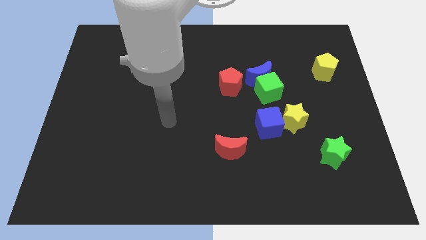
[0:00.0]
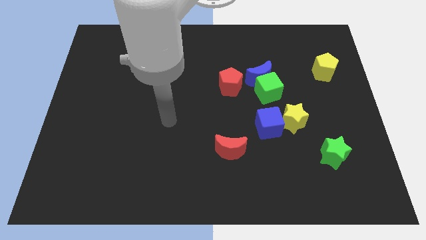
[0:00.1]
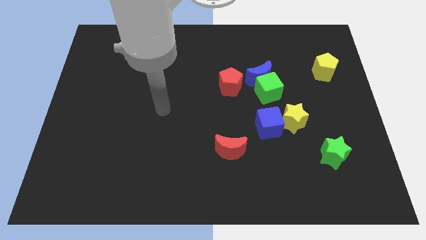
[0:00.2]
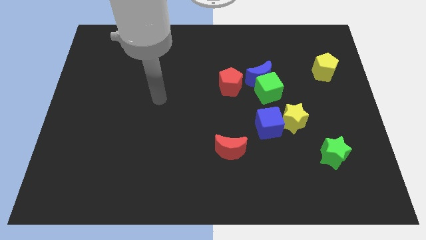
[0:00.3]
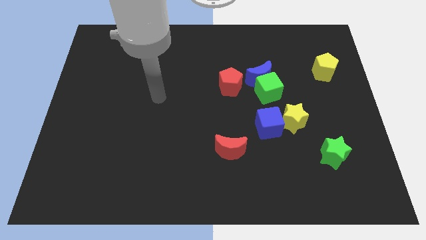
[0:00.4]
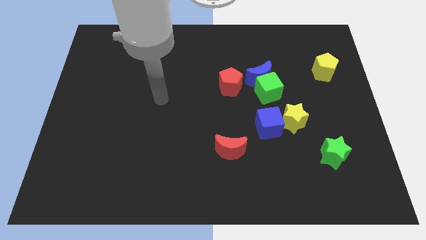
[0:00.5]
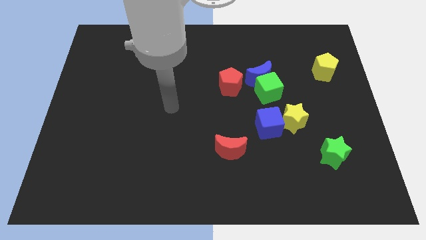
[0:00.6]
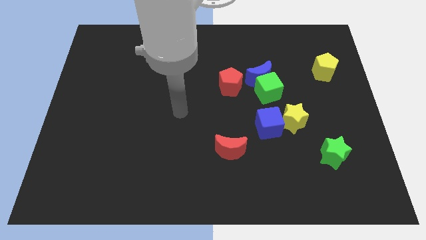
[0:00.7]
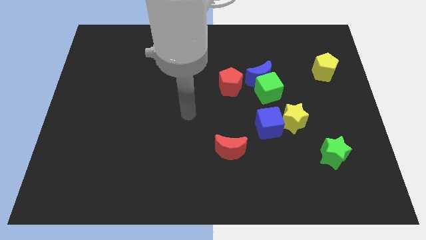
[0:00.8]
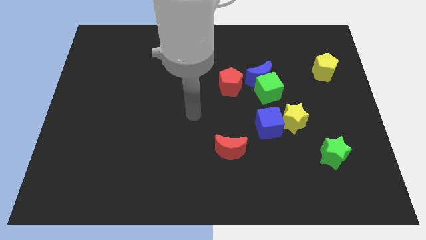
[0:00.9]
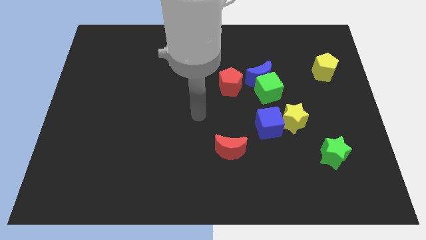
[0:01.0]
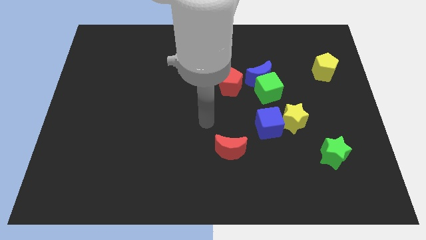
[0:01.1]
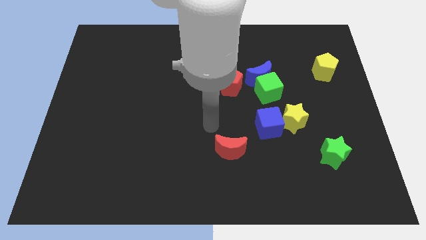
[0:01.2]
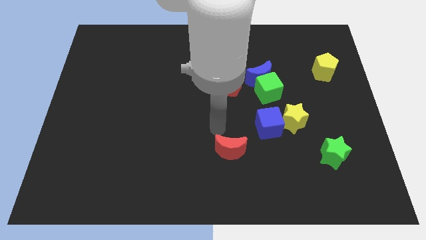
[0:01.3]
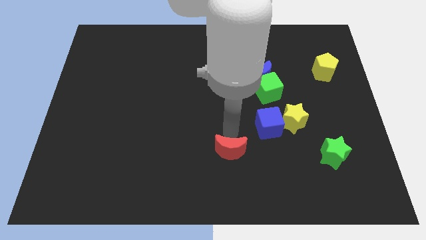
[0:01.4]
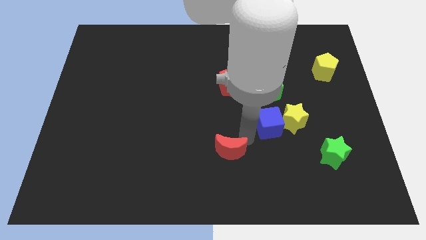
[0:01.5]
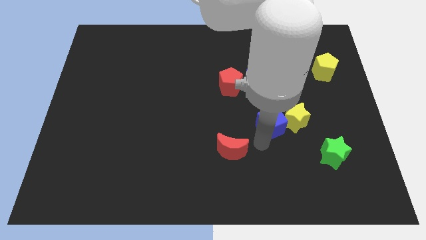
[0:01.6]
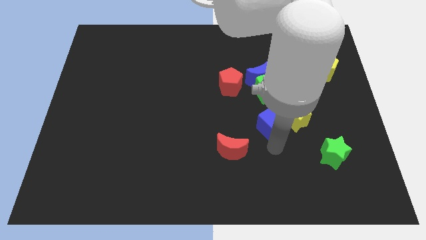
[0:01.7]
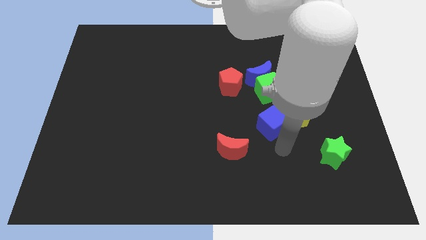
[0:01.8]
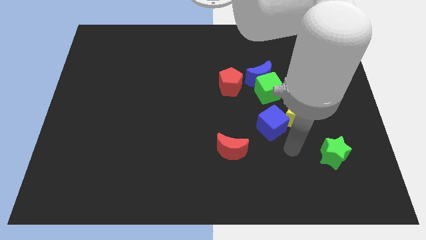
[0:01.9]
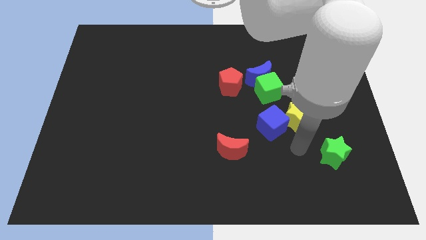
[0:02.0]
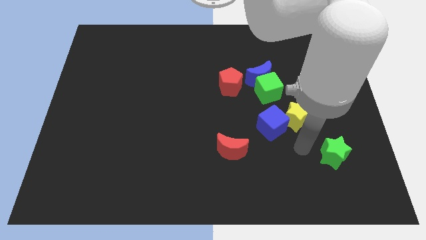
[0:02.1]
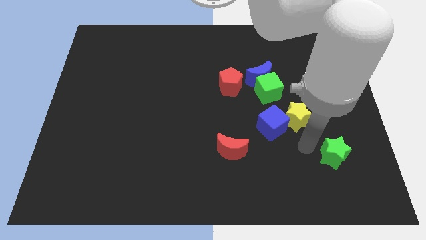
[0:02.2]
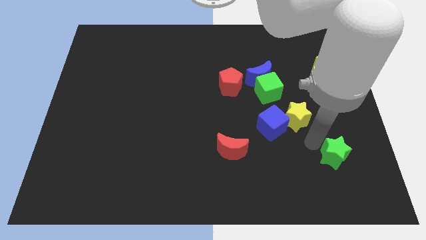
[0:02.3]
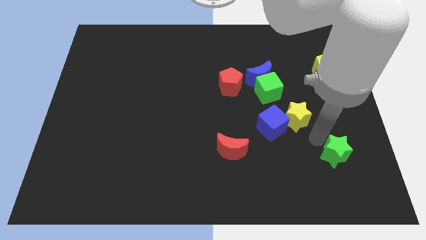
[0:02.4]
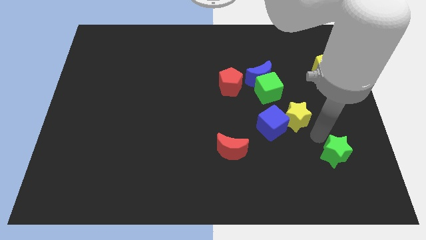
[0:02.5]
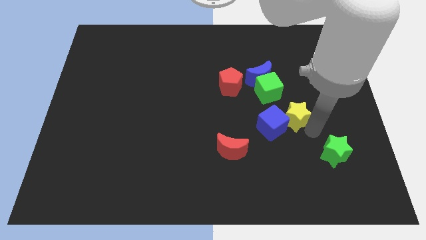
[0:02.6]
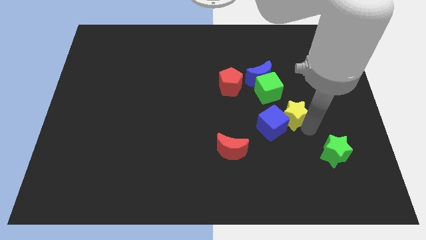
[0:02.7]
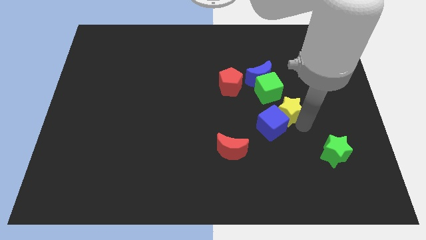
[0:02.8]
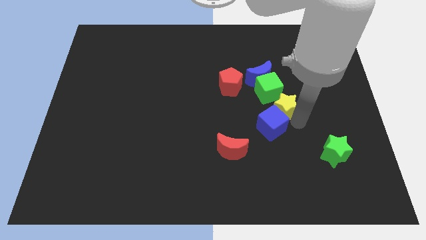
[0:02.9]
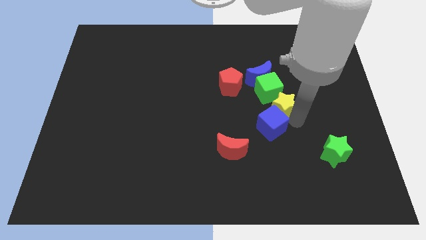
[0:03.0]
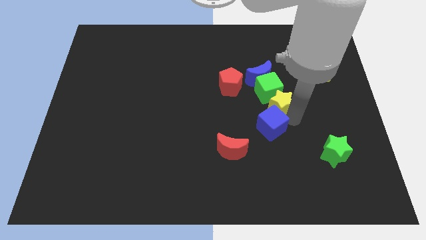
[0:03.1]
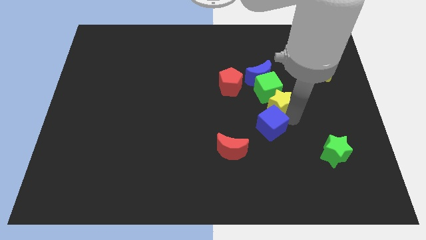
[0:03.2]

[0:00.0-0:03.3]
place the yellow star vertically below the green cube

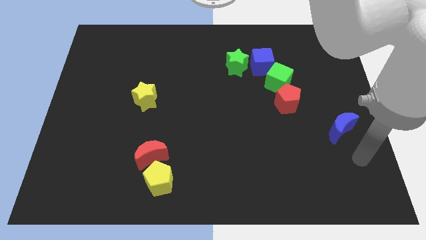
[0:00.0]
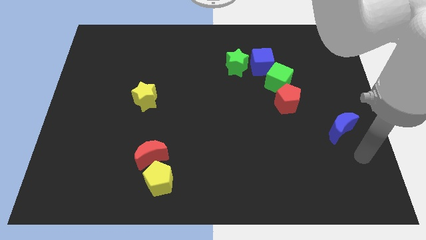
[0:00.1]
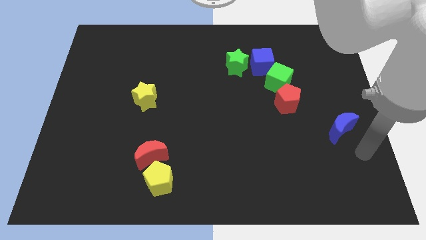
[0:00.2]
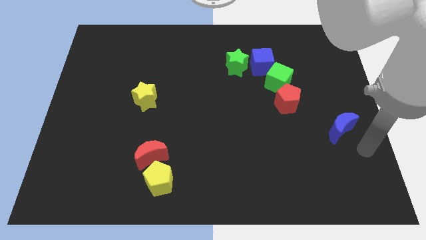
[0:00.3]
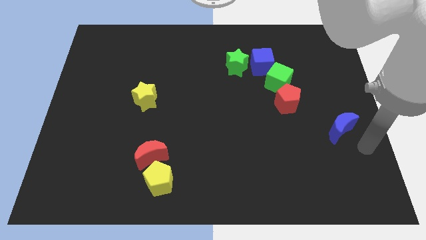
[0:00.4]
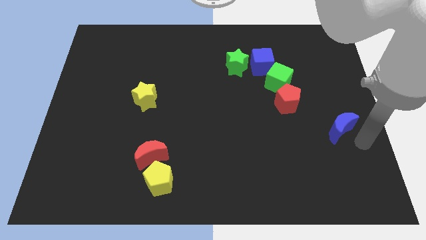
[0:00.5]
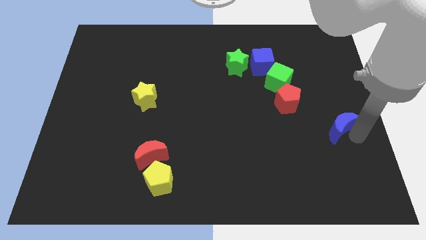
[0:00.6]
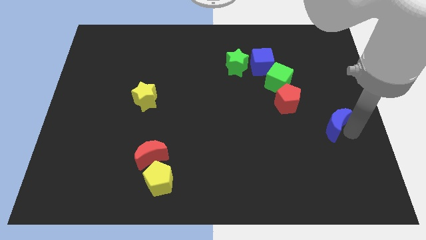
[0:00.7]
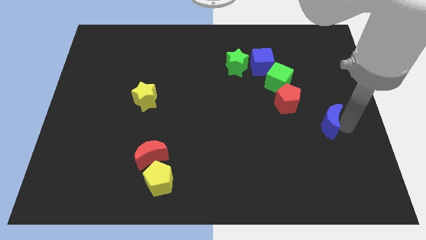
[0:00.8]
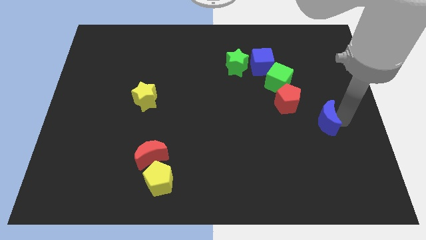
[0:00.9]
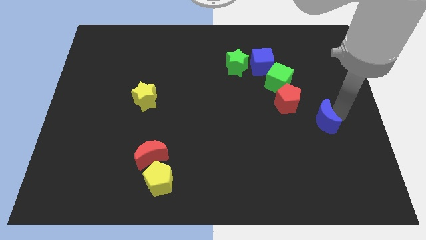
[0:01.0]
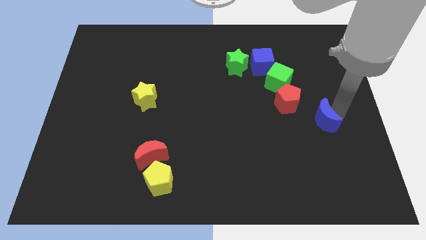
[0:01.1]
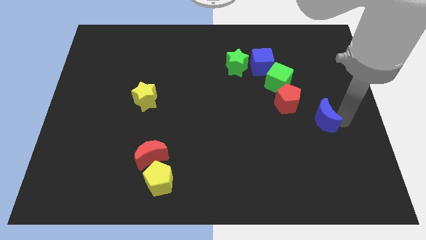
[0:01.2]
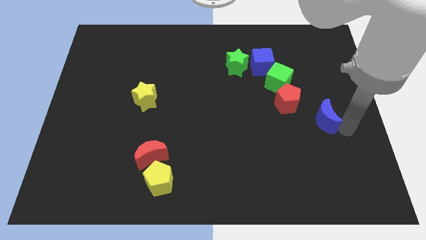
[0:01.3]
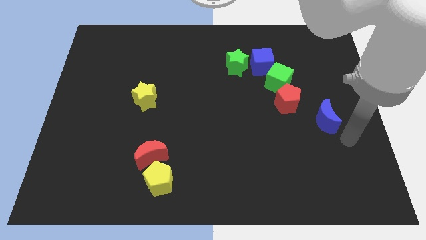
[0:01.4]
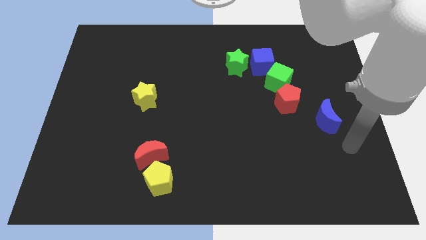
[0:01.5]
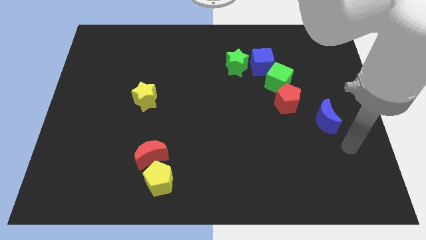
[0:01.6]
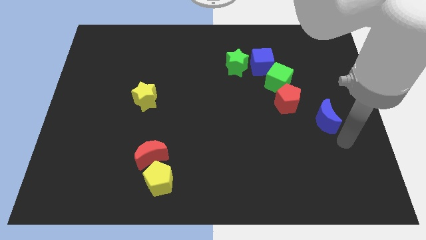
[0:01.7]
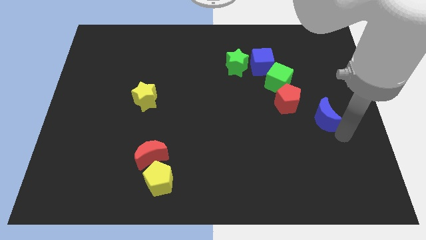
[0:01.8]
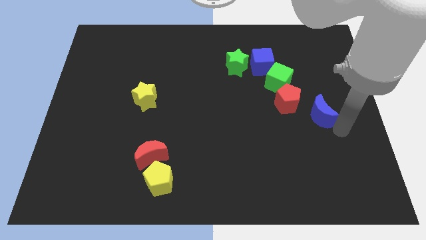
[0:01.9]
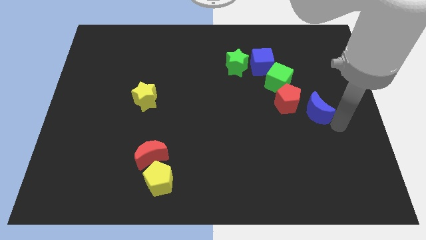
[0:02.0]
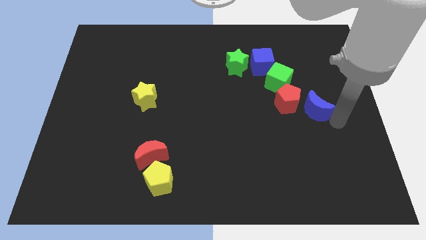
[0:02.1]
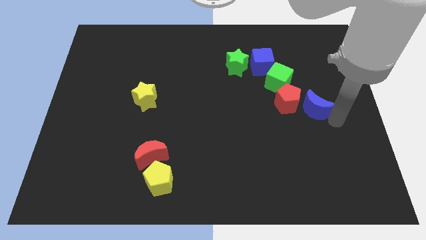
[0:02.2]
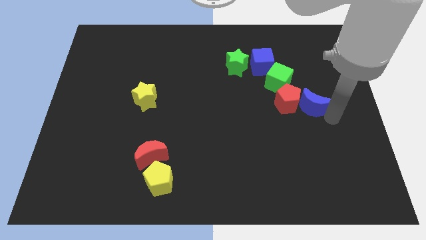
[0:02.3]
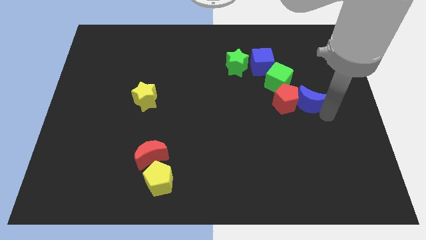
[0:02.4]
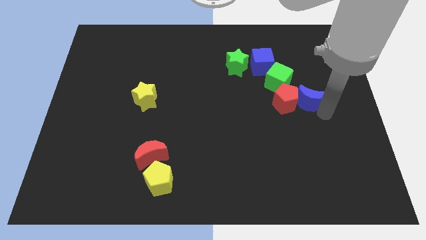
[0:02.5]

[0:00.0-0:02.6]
make the blue crescent to touch the right side of the red pentagon

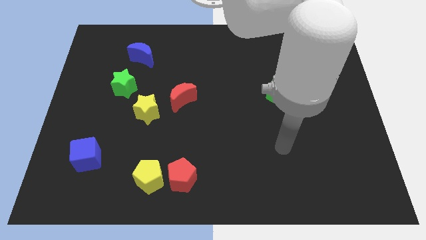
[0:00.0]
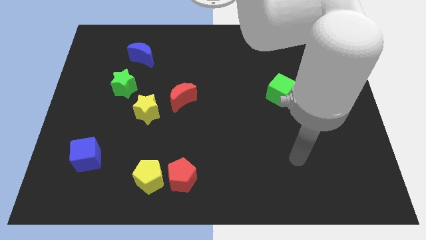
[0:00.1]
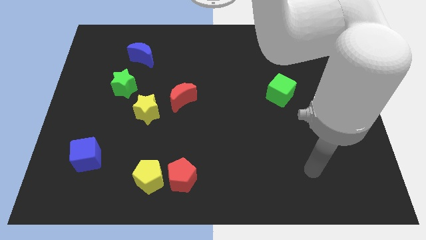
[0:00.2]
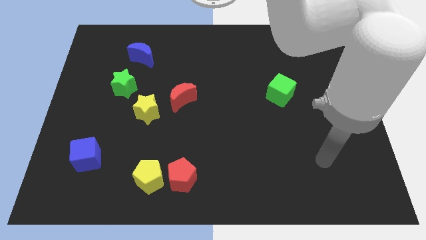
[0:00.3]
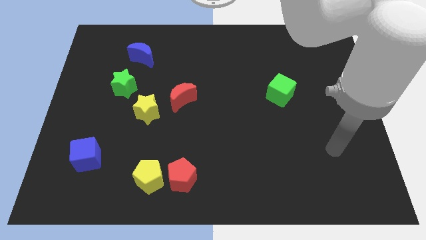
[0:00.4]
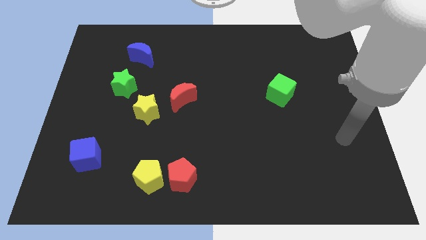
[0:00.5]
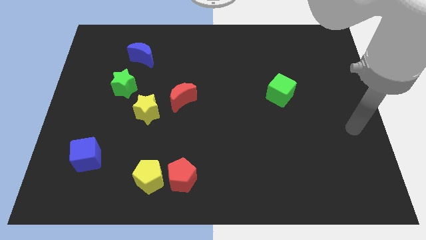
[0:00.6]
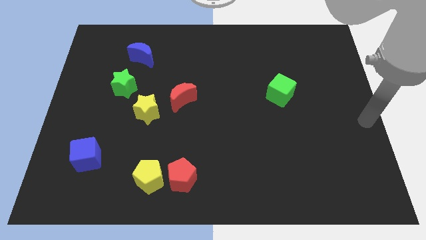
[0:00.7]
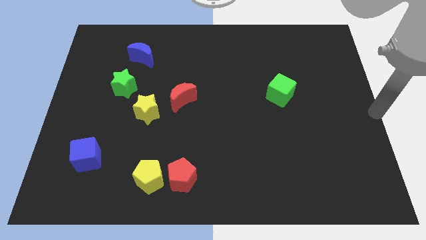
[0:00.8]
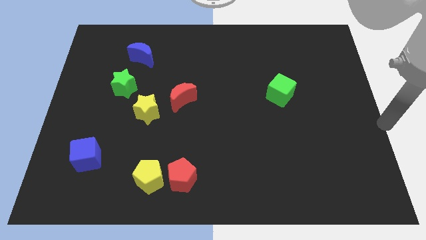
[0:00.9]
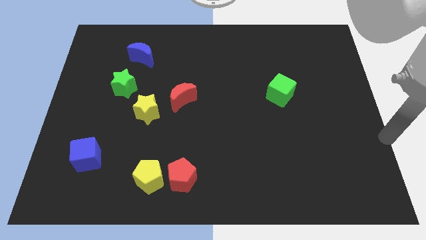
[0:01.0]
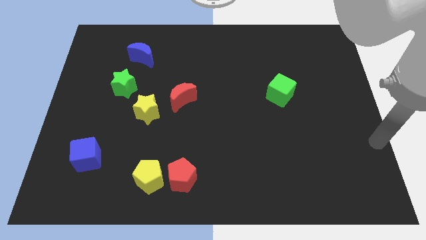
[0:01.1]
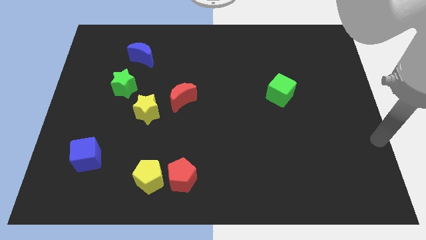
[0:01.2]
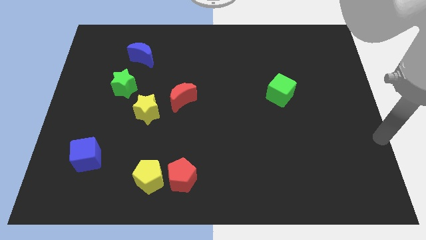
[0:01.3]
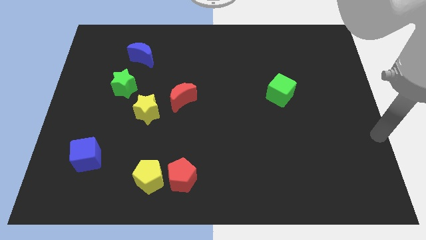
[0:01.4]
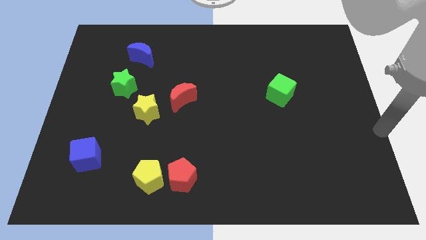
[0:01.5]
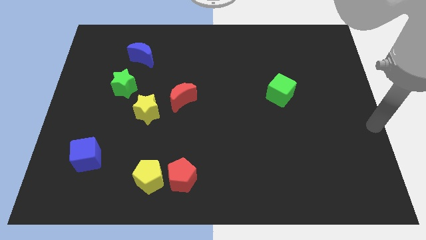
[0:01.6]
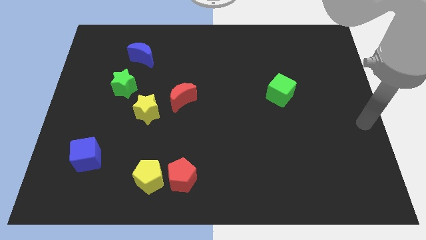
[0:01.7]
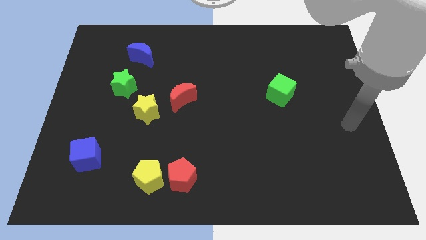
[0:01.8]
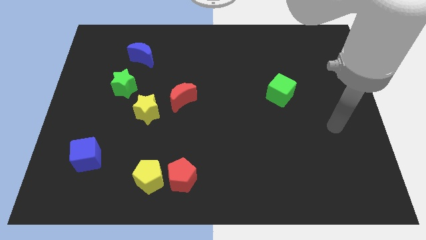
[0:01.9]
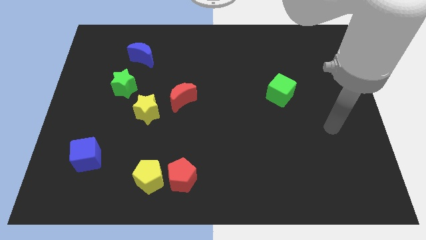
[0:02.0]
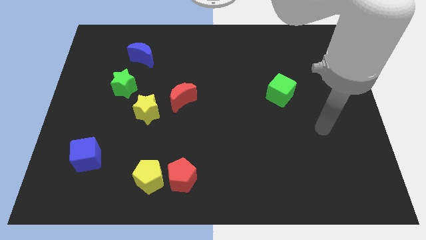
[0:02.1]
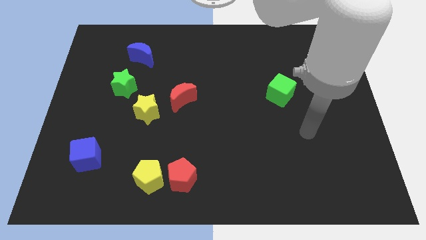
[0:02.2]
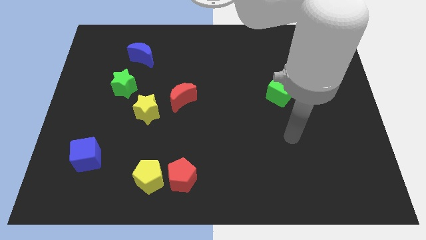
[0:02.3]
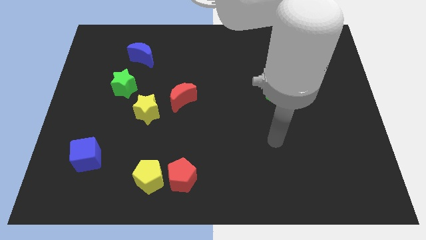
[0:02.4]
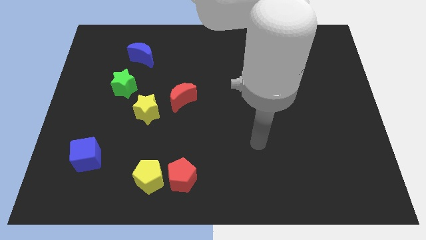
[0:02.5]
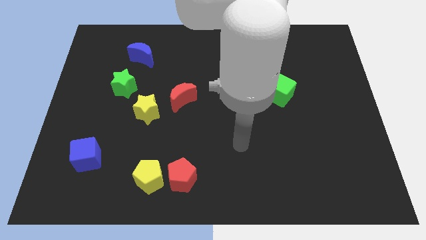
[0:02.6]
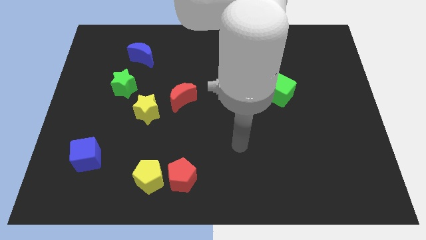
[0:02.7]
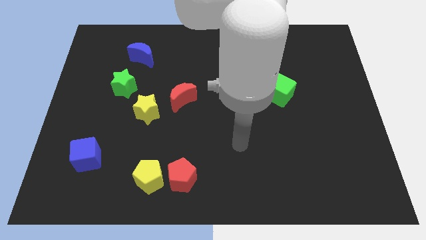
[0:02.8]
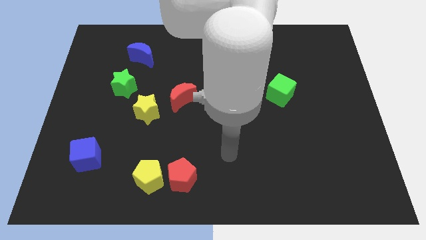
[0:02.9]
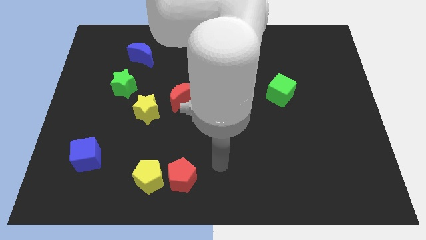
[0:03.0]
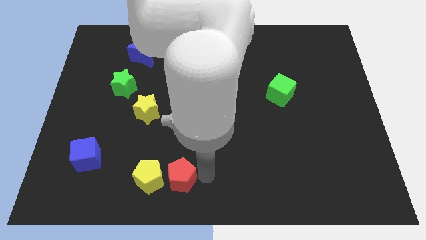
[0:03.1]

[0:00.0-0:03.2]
move hand on the right side of the red pentagon
